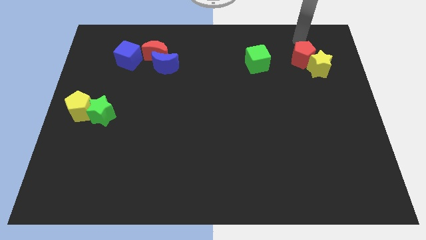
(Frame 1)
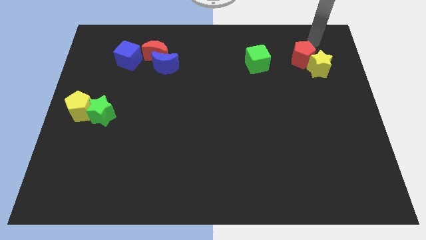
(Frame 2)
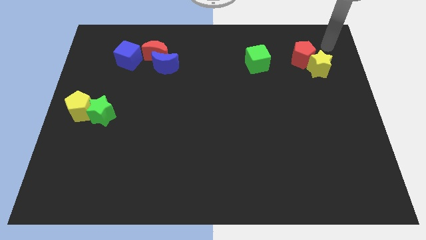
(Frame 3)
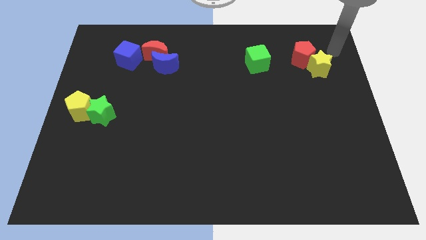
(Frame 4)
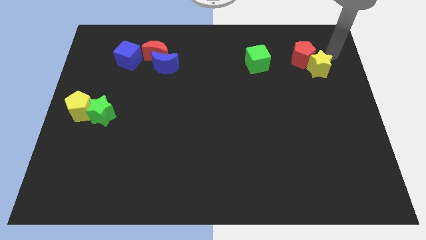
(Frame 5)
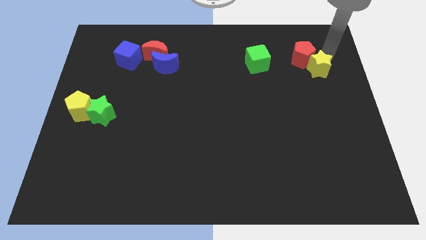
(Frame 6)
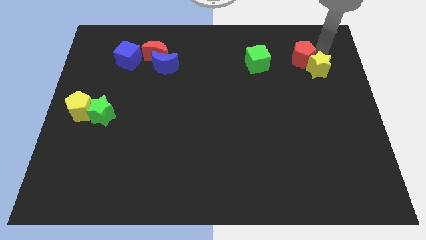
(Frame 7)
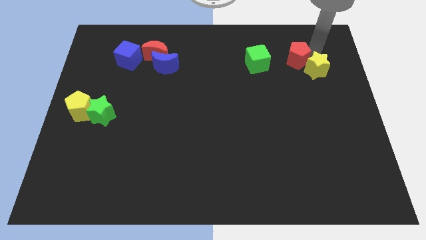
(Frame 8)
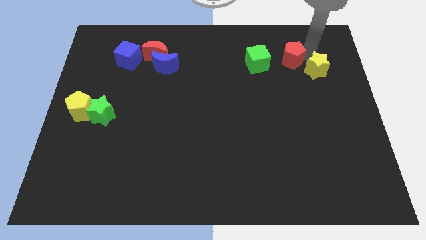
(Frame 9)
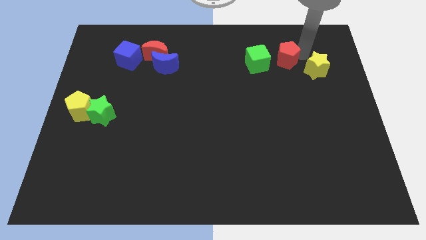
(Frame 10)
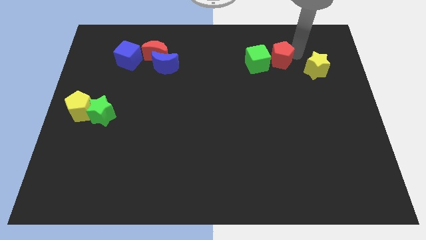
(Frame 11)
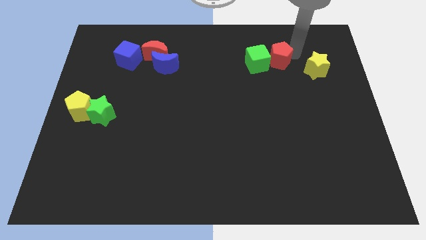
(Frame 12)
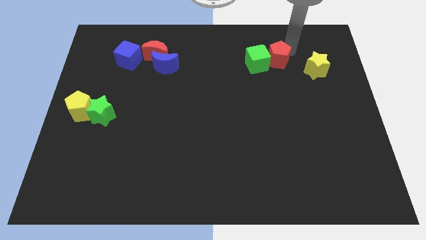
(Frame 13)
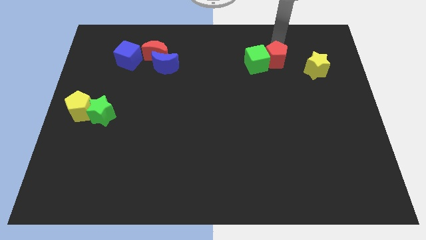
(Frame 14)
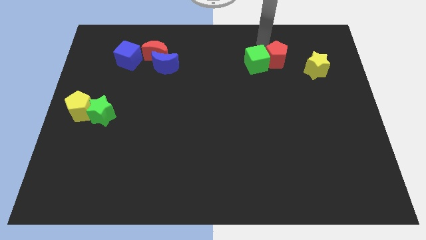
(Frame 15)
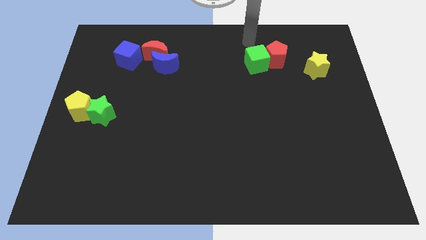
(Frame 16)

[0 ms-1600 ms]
separate yellow star and the red pentagon

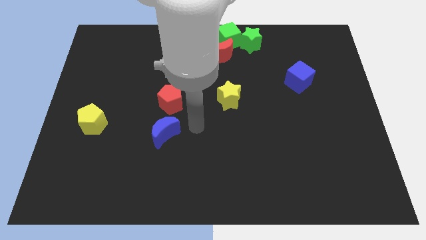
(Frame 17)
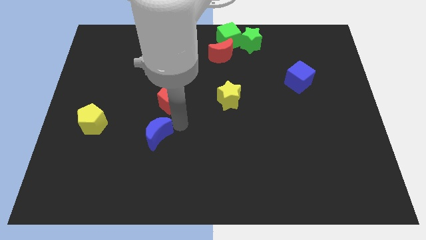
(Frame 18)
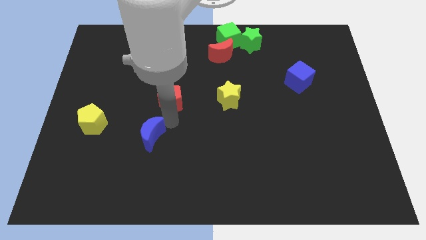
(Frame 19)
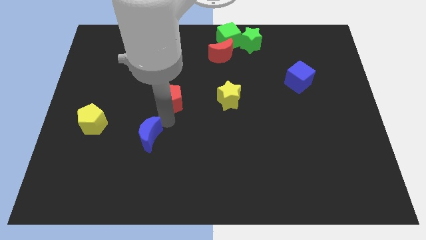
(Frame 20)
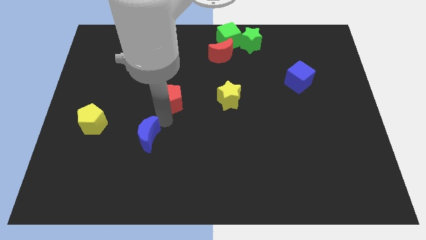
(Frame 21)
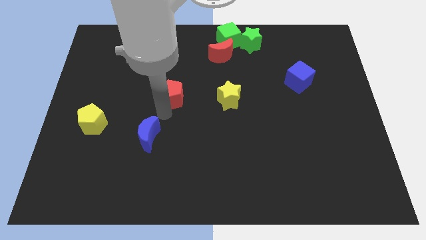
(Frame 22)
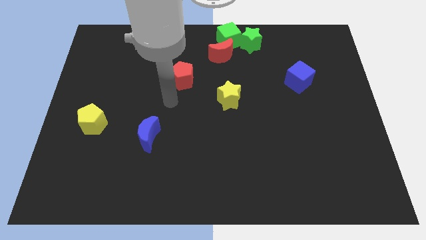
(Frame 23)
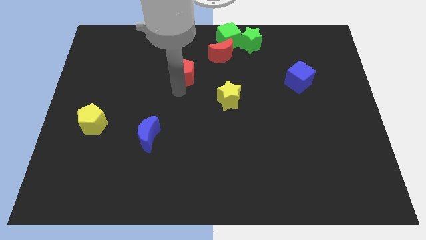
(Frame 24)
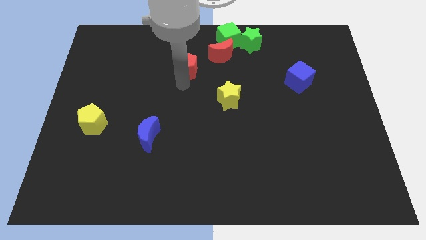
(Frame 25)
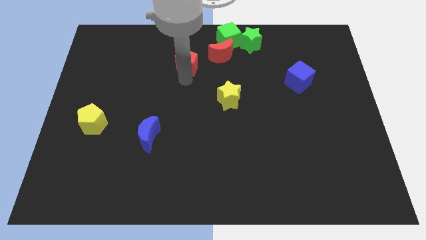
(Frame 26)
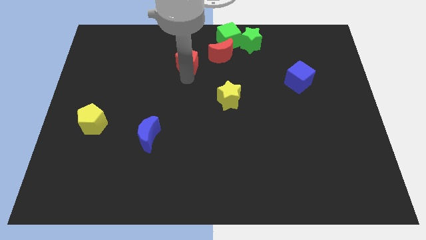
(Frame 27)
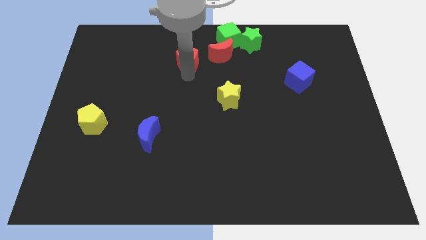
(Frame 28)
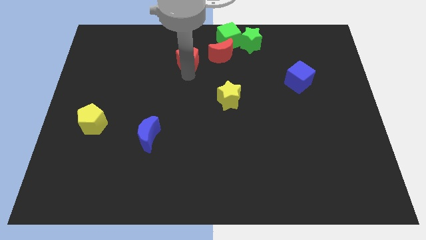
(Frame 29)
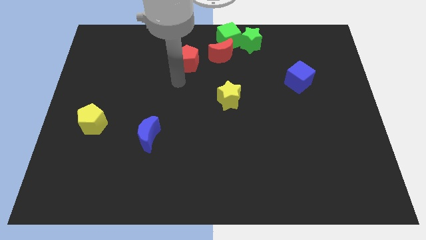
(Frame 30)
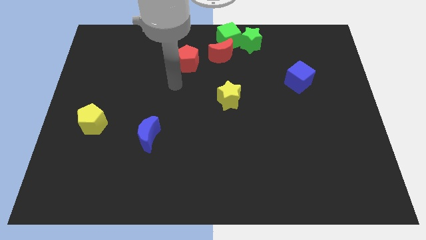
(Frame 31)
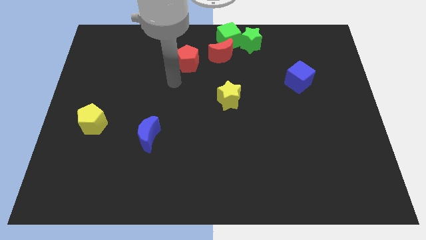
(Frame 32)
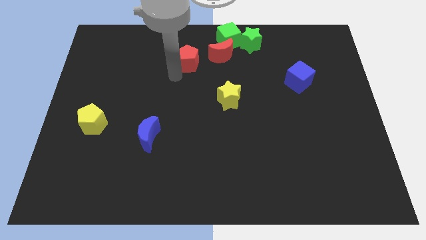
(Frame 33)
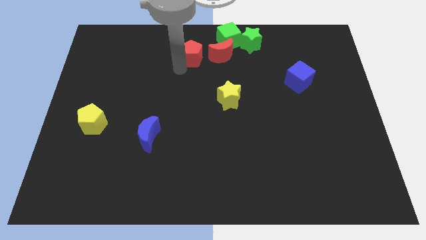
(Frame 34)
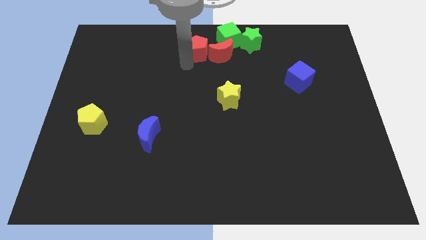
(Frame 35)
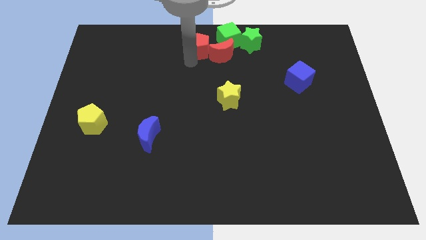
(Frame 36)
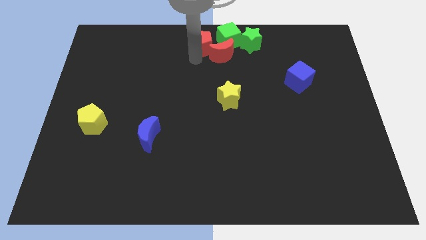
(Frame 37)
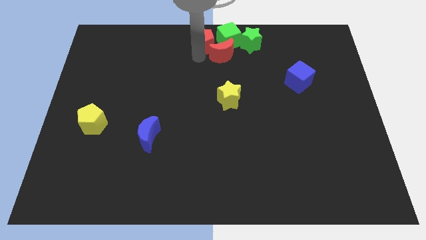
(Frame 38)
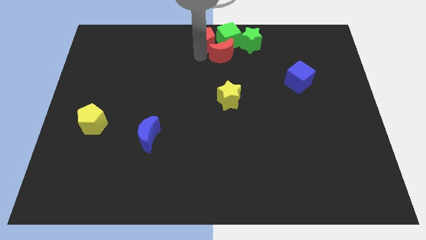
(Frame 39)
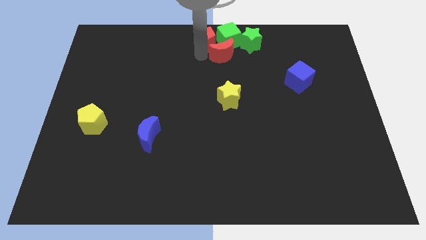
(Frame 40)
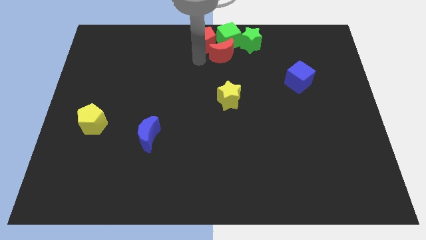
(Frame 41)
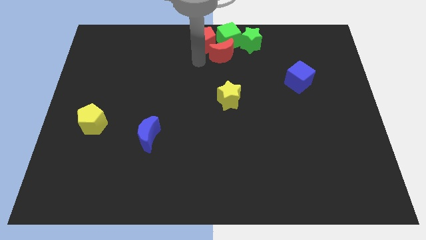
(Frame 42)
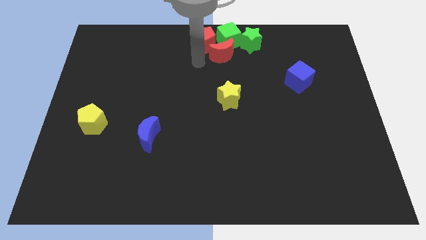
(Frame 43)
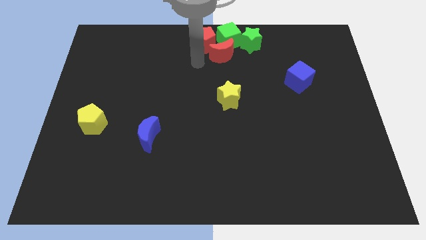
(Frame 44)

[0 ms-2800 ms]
move the red pentagon towards left side of the green cube

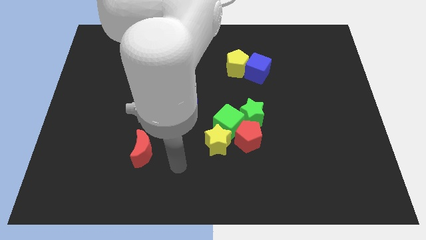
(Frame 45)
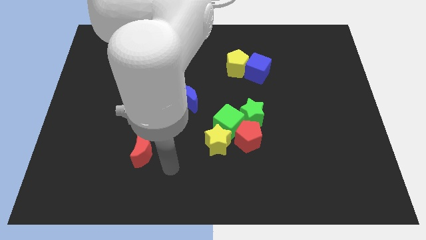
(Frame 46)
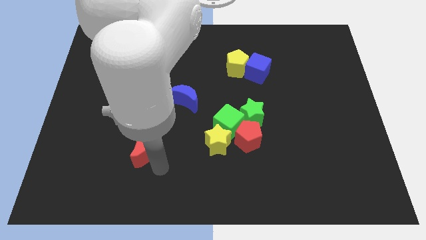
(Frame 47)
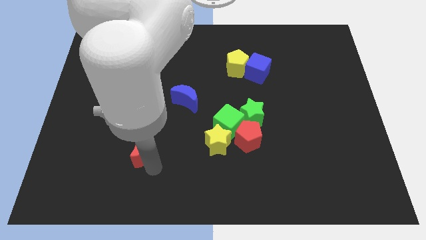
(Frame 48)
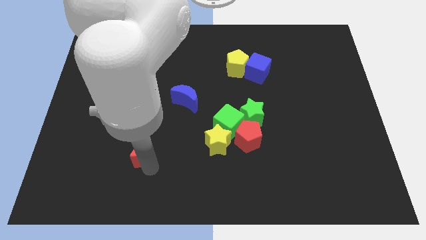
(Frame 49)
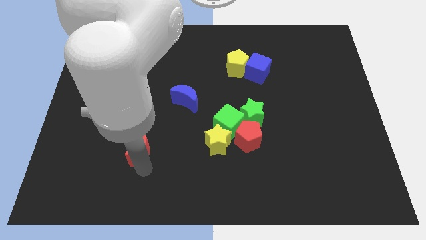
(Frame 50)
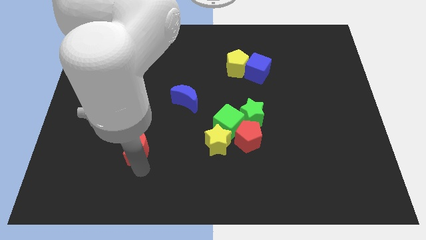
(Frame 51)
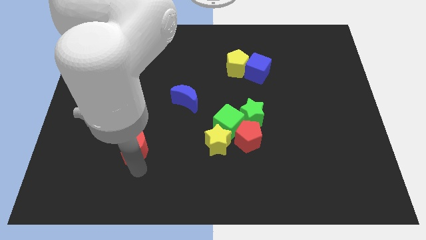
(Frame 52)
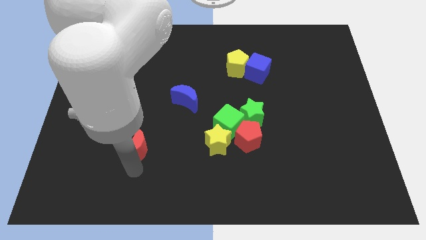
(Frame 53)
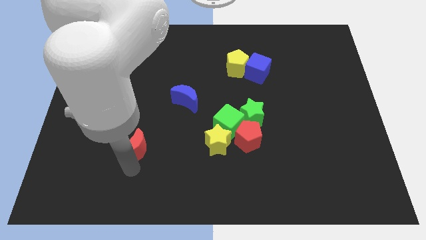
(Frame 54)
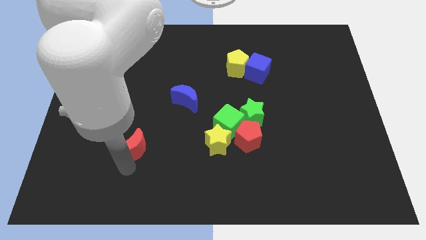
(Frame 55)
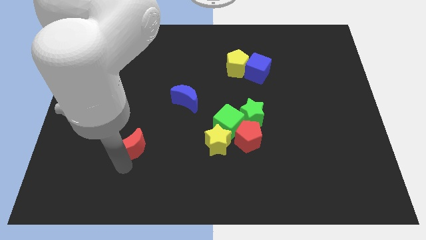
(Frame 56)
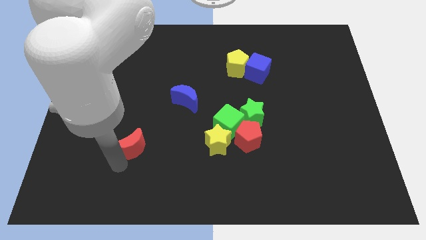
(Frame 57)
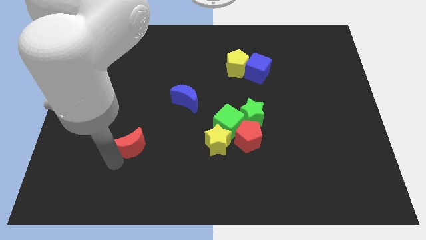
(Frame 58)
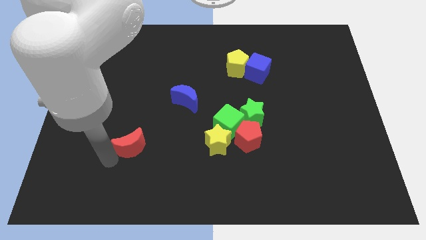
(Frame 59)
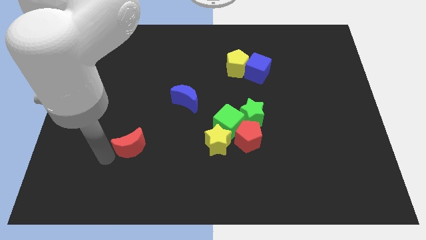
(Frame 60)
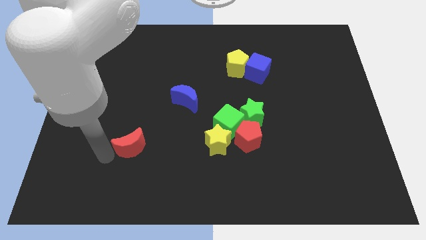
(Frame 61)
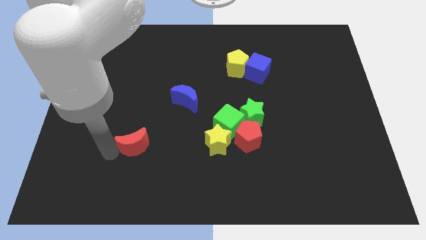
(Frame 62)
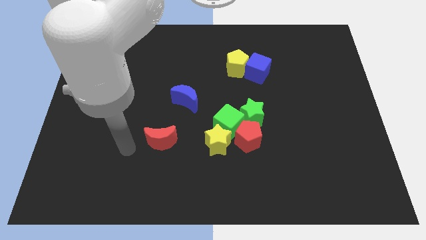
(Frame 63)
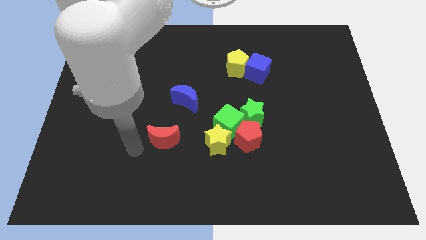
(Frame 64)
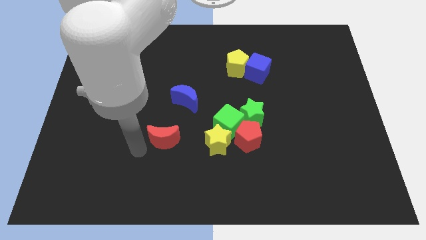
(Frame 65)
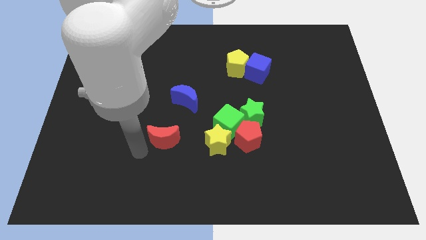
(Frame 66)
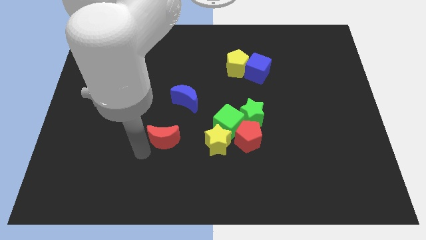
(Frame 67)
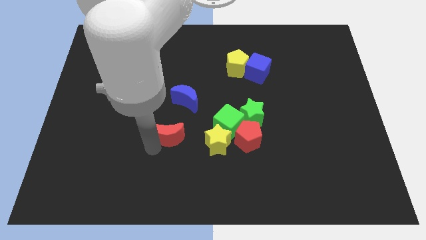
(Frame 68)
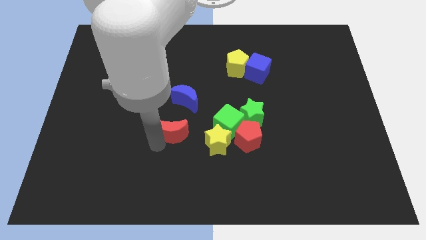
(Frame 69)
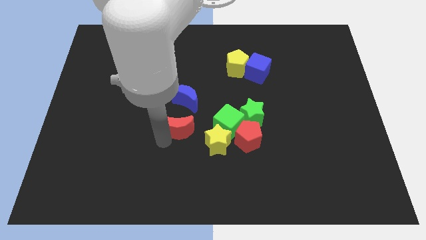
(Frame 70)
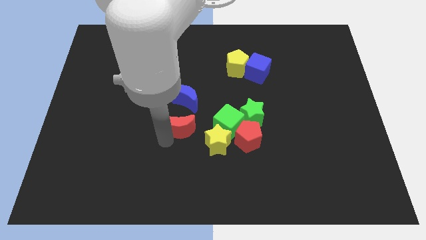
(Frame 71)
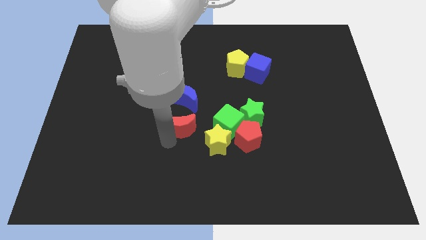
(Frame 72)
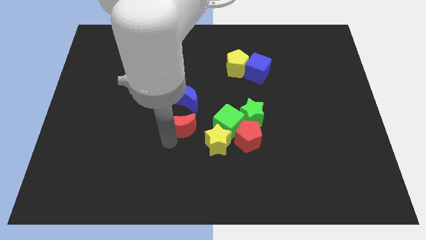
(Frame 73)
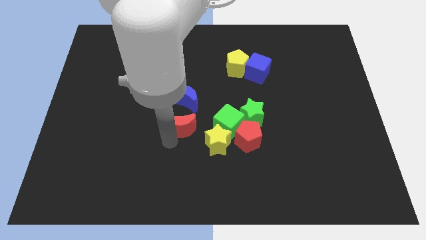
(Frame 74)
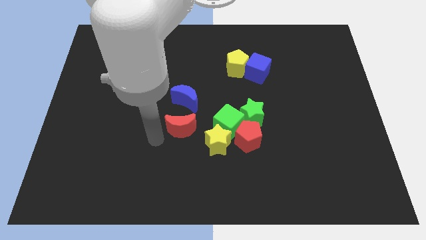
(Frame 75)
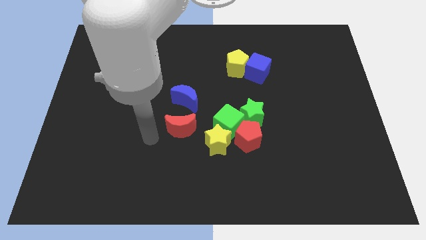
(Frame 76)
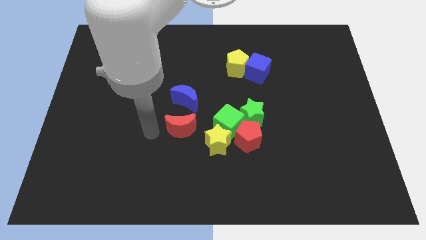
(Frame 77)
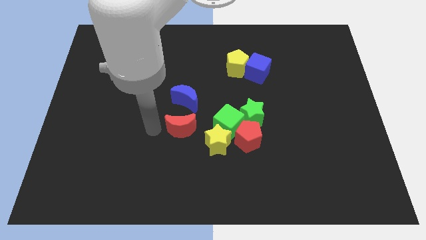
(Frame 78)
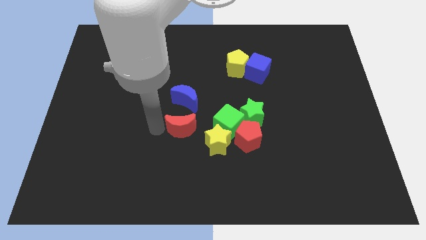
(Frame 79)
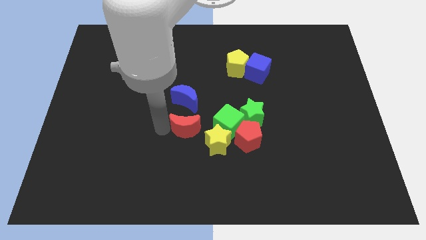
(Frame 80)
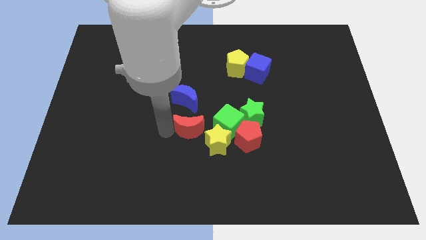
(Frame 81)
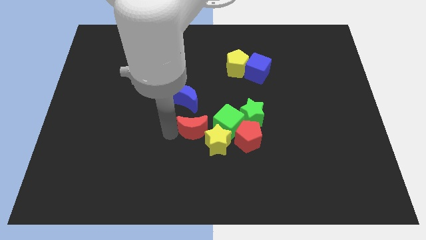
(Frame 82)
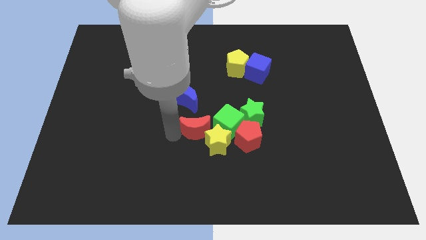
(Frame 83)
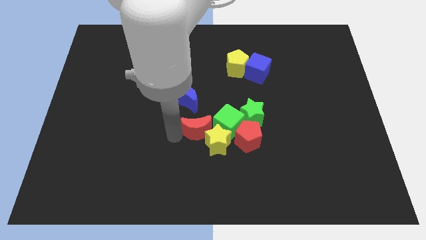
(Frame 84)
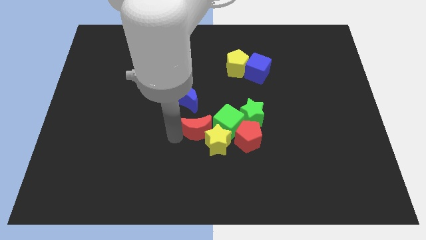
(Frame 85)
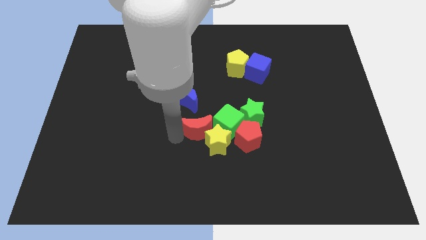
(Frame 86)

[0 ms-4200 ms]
move the red crescent to the left of the green cube

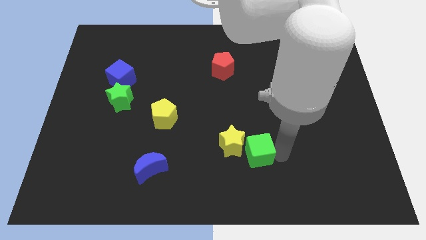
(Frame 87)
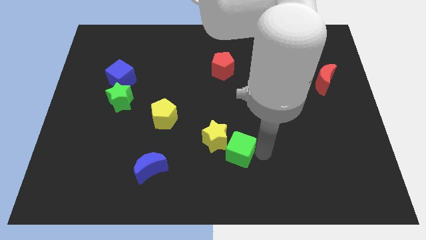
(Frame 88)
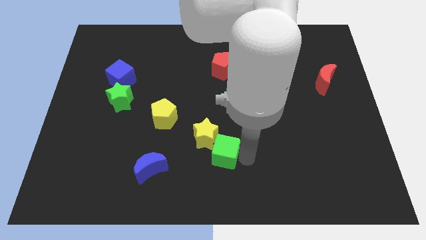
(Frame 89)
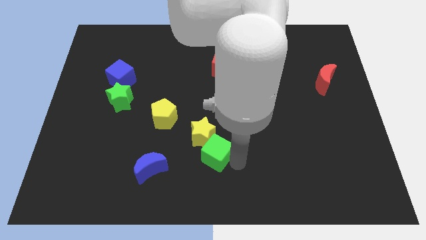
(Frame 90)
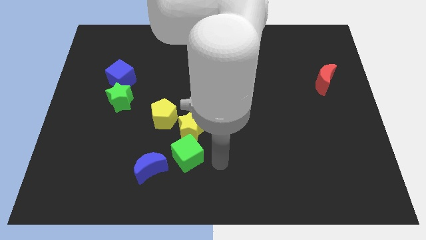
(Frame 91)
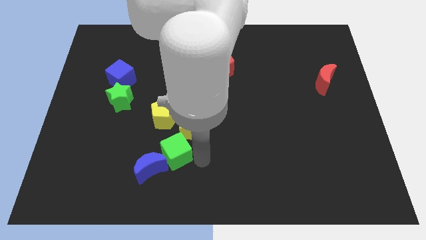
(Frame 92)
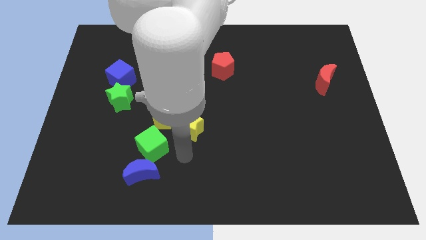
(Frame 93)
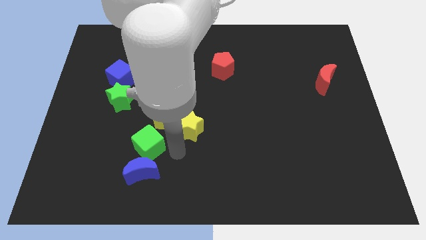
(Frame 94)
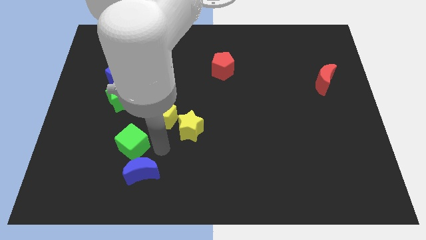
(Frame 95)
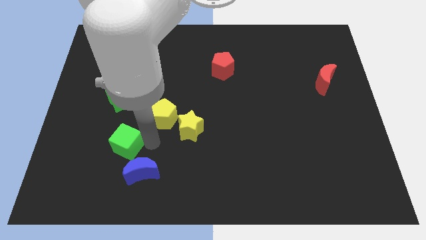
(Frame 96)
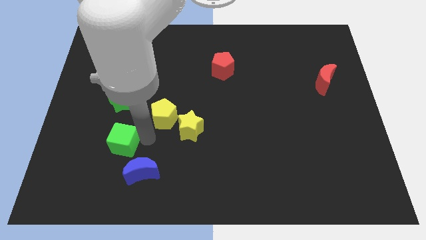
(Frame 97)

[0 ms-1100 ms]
slide the green cube slightly to the left
